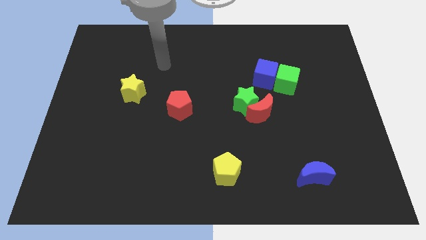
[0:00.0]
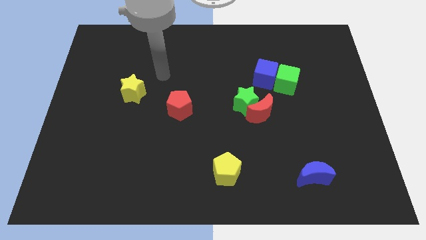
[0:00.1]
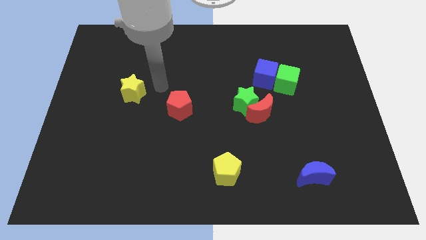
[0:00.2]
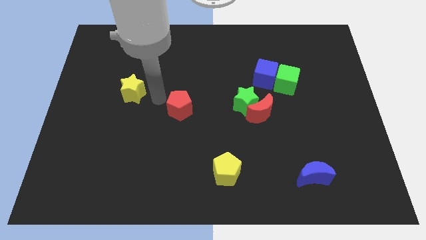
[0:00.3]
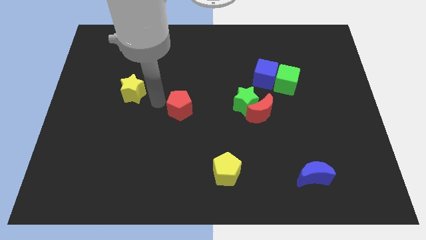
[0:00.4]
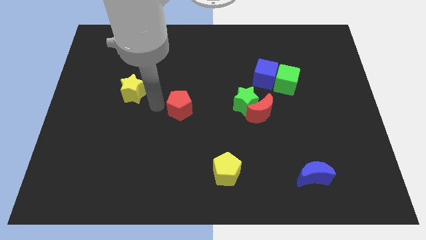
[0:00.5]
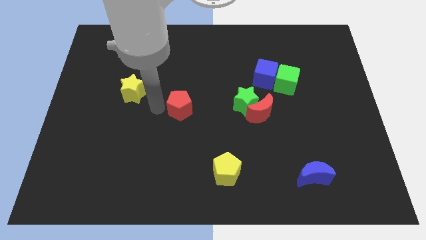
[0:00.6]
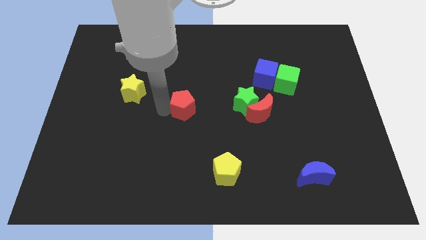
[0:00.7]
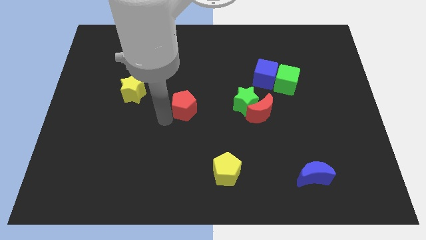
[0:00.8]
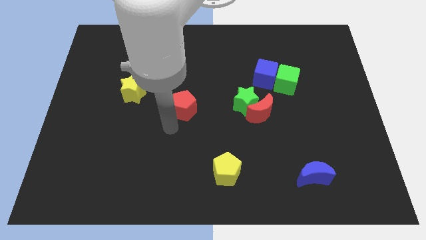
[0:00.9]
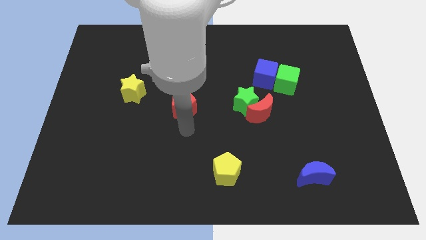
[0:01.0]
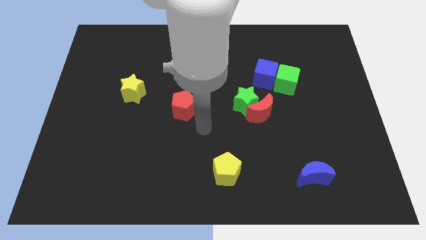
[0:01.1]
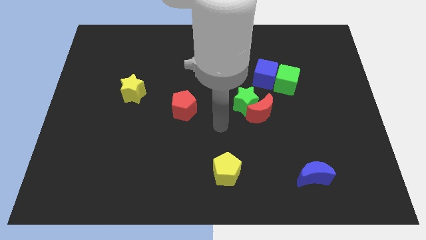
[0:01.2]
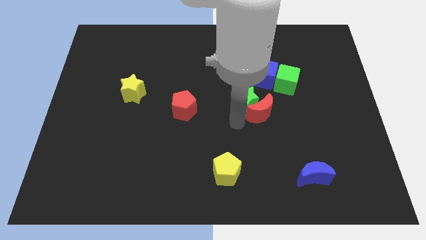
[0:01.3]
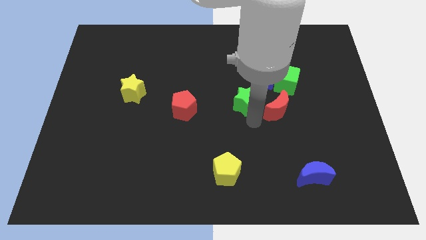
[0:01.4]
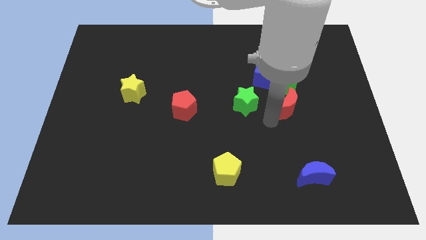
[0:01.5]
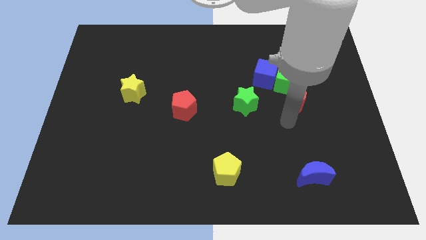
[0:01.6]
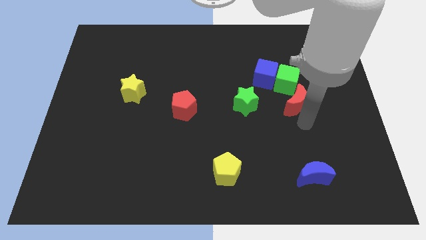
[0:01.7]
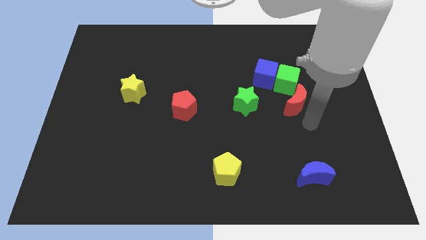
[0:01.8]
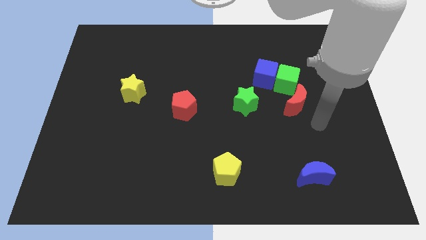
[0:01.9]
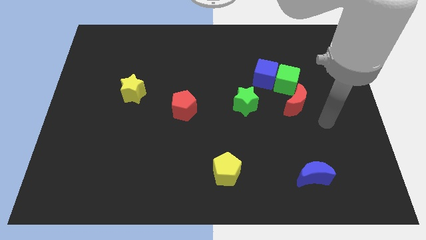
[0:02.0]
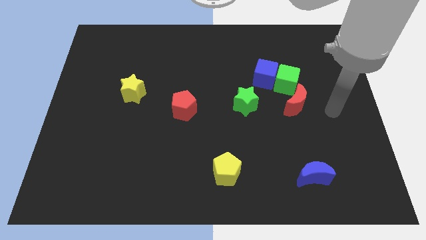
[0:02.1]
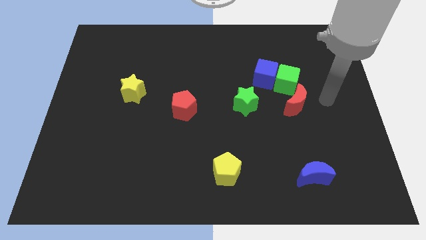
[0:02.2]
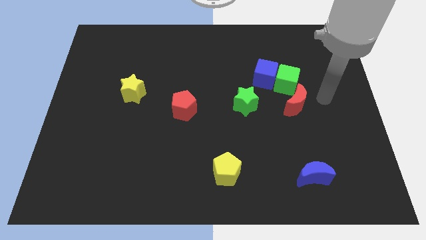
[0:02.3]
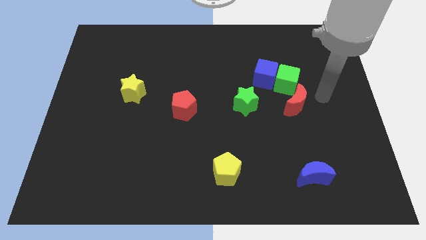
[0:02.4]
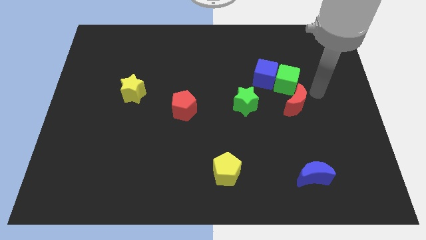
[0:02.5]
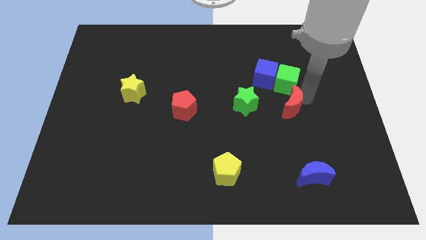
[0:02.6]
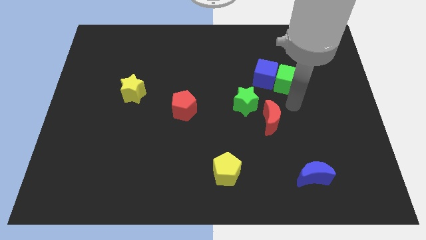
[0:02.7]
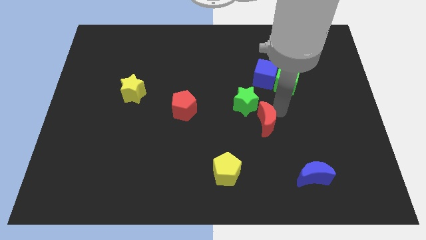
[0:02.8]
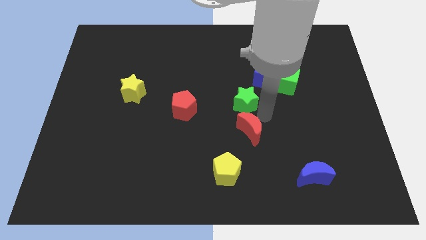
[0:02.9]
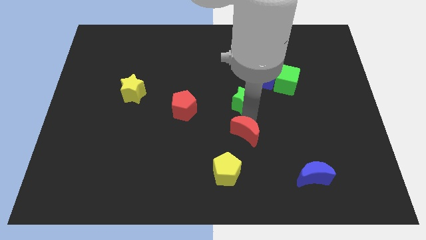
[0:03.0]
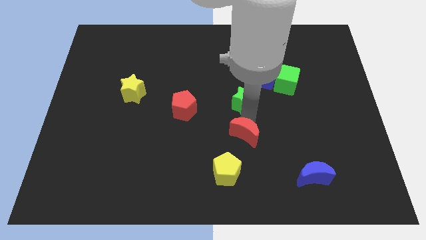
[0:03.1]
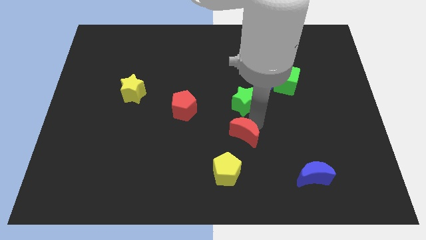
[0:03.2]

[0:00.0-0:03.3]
place the red moon in between the green star and yellow pentagon

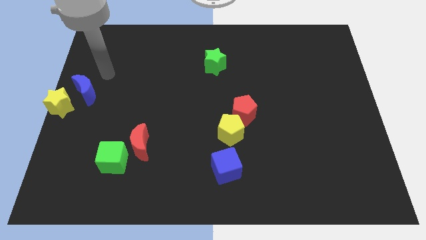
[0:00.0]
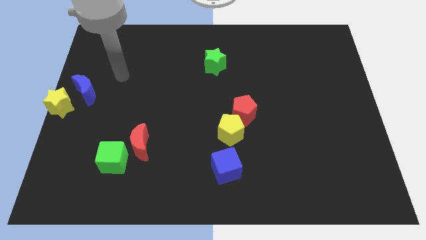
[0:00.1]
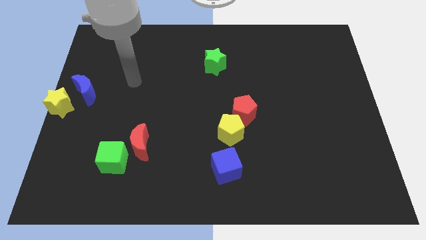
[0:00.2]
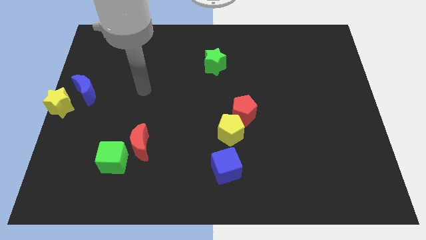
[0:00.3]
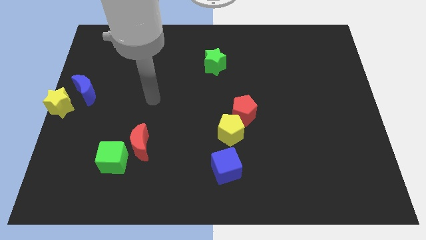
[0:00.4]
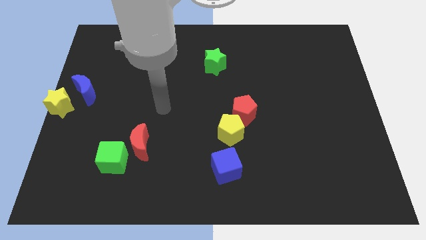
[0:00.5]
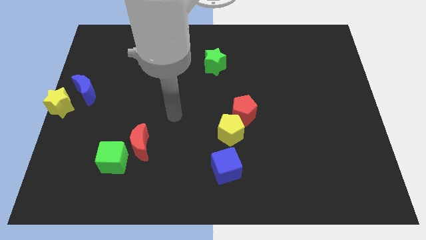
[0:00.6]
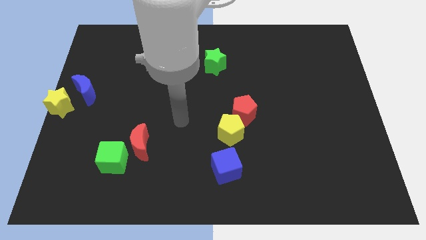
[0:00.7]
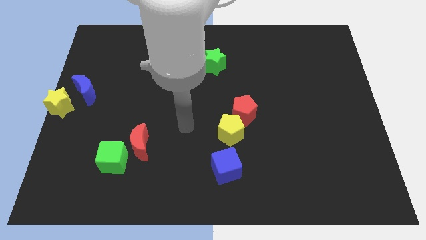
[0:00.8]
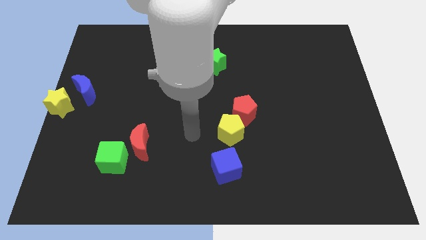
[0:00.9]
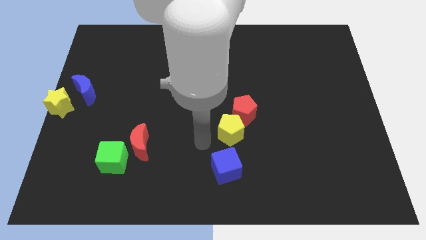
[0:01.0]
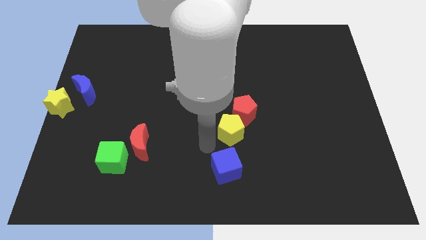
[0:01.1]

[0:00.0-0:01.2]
move your arm to the top of blue cube

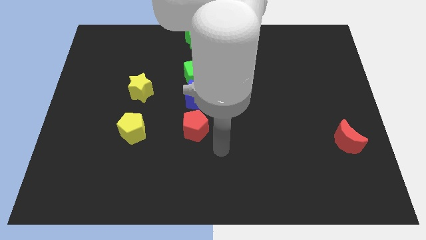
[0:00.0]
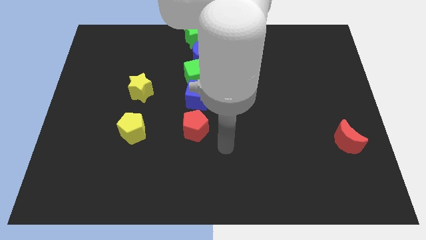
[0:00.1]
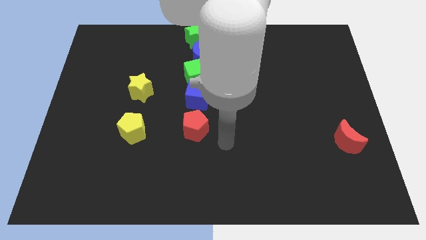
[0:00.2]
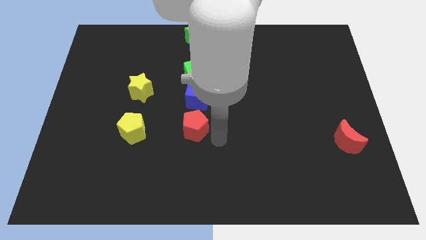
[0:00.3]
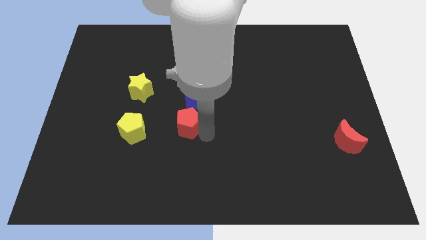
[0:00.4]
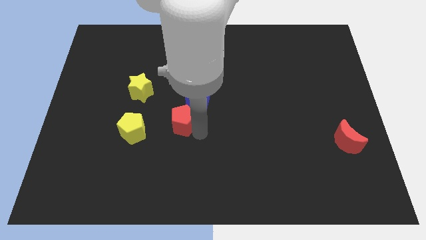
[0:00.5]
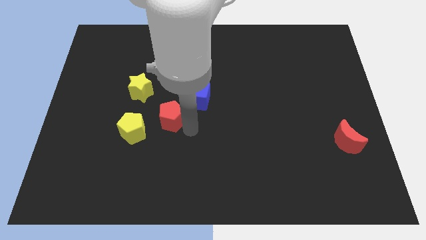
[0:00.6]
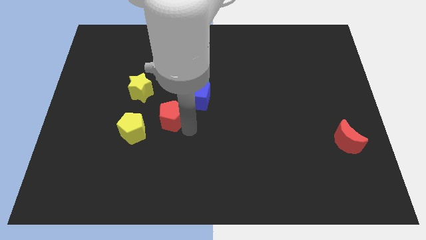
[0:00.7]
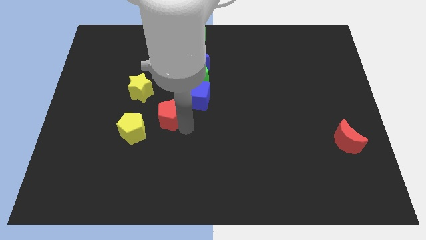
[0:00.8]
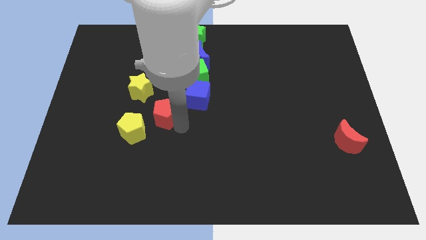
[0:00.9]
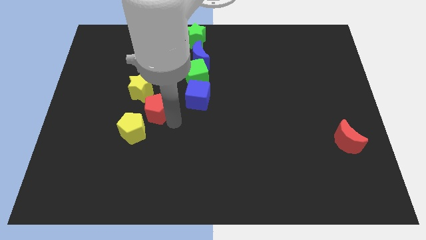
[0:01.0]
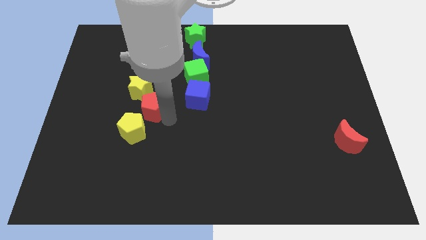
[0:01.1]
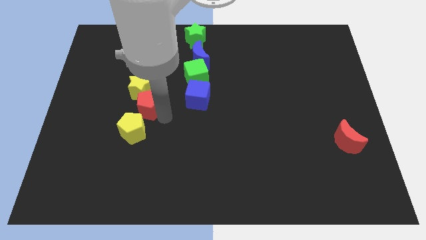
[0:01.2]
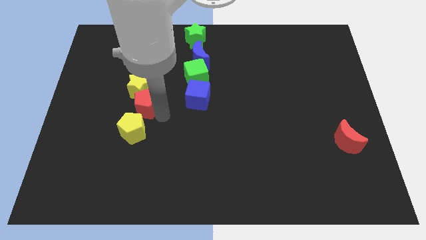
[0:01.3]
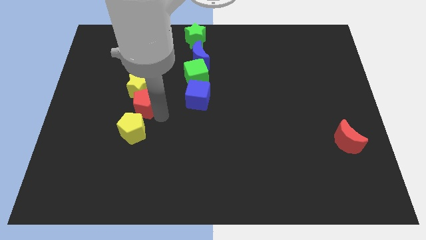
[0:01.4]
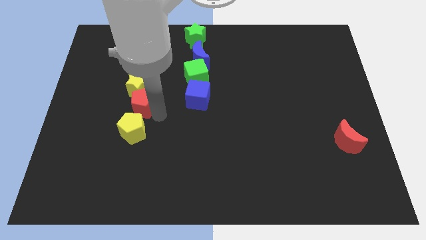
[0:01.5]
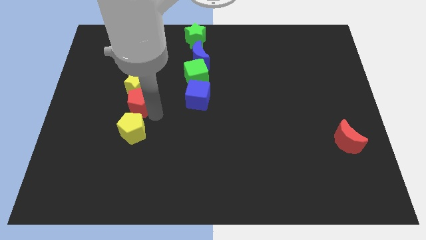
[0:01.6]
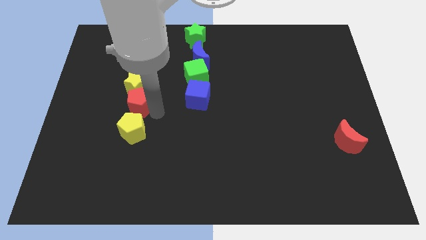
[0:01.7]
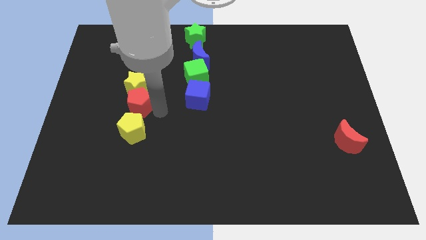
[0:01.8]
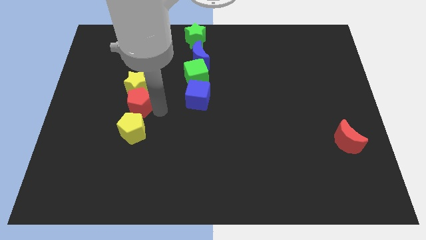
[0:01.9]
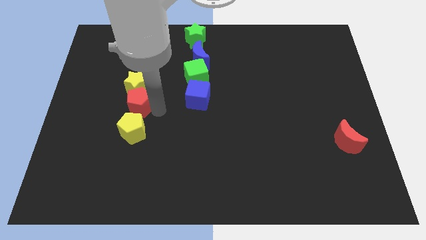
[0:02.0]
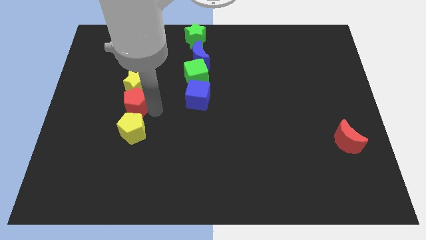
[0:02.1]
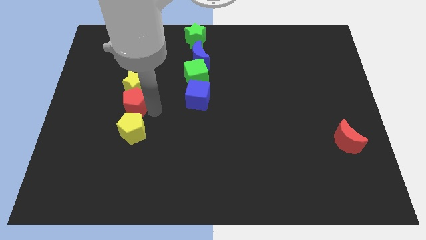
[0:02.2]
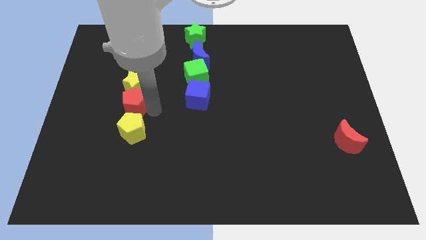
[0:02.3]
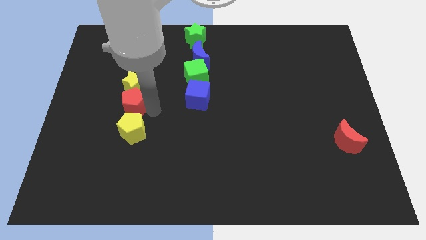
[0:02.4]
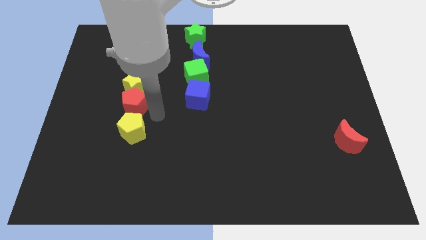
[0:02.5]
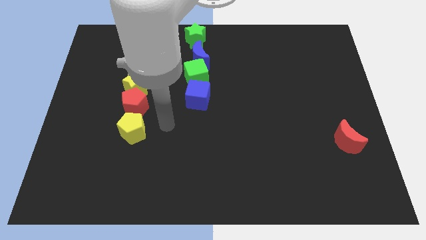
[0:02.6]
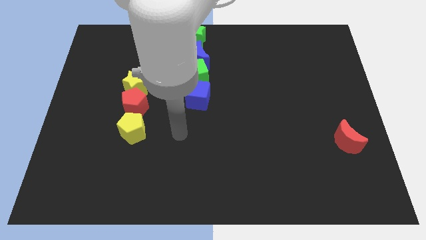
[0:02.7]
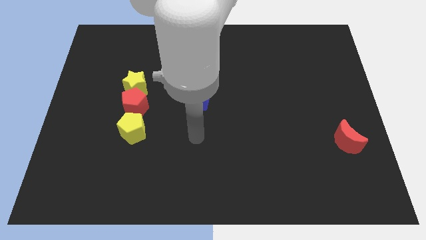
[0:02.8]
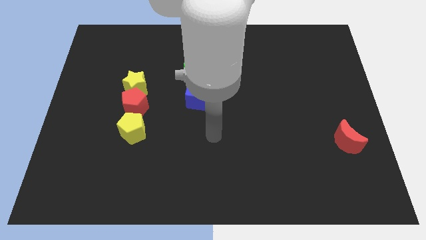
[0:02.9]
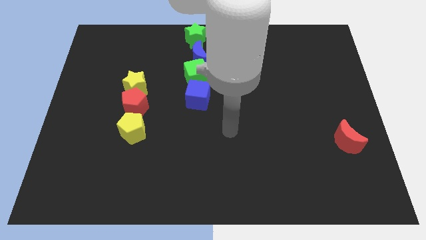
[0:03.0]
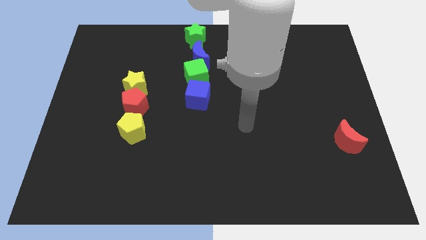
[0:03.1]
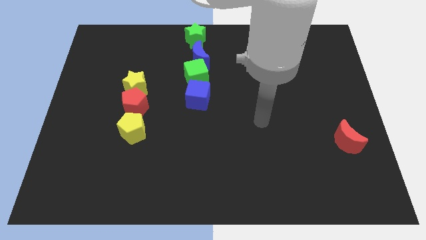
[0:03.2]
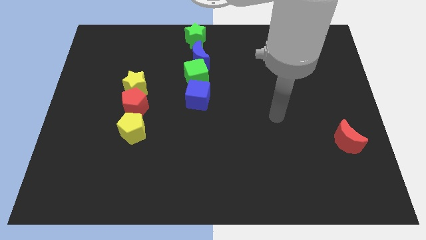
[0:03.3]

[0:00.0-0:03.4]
move the red pentagon between the yellow star and yellow pentagon

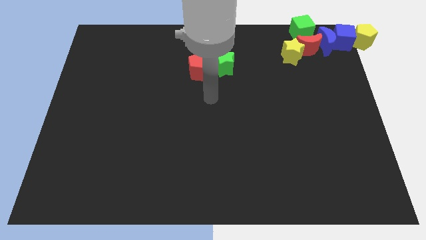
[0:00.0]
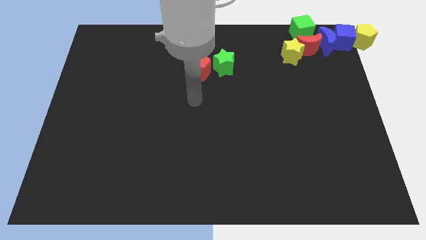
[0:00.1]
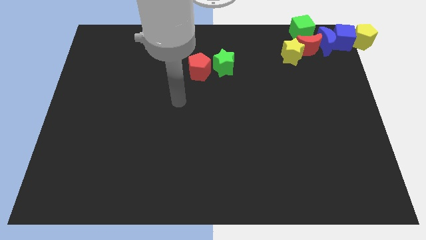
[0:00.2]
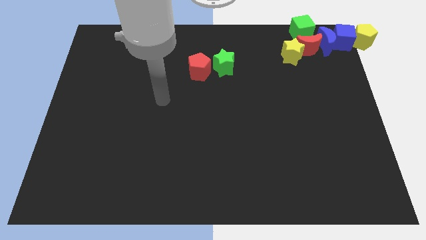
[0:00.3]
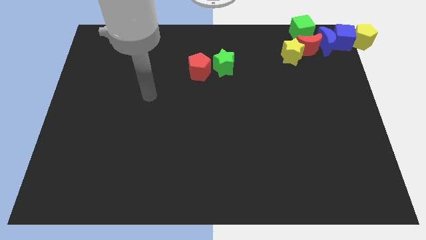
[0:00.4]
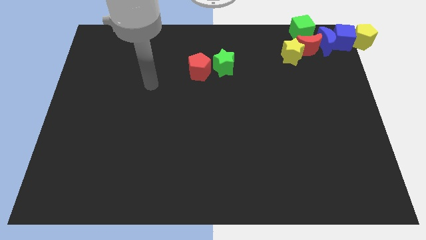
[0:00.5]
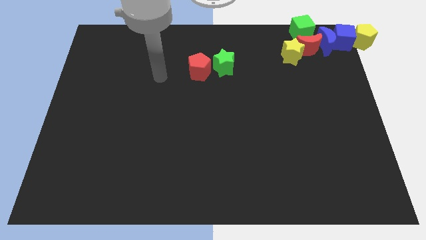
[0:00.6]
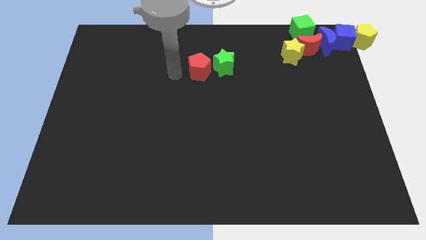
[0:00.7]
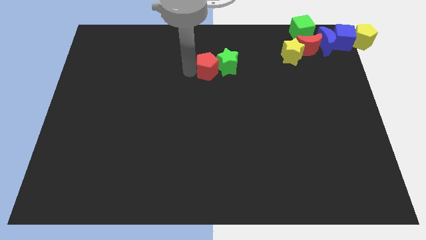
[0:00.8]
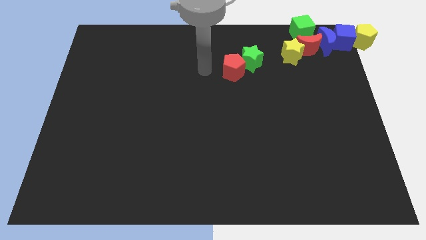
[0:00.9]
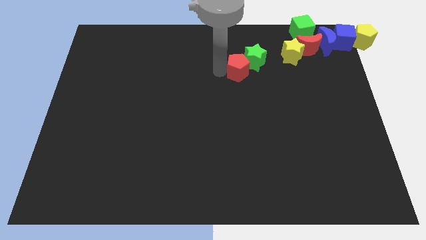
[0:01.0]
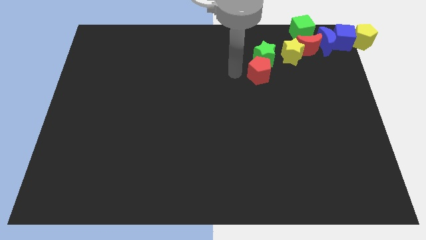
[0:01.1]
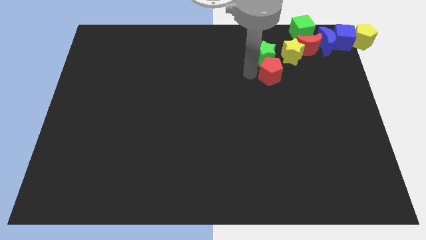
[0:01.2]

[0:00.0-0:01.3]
push the green star into the red pentagon
